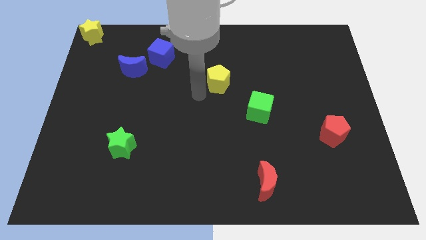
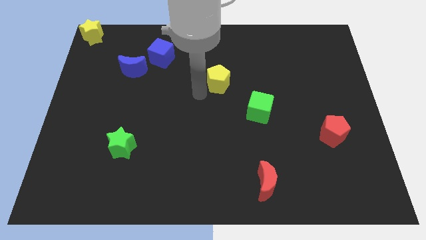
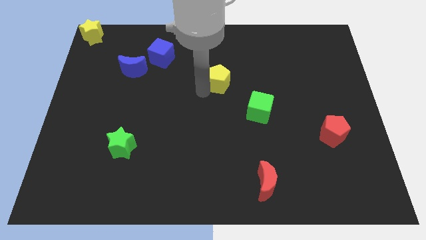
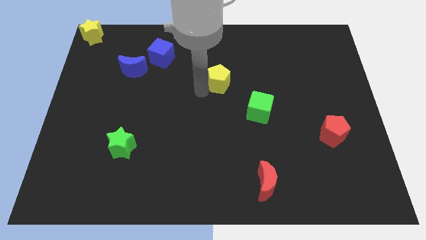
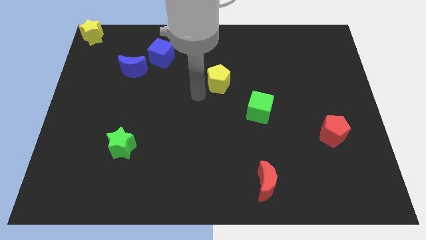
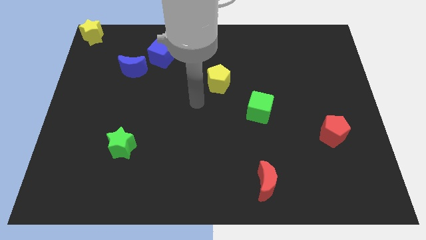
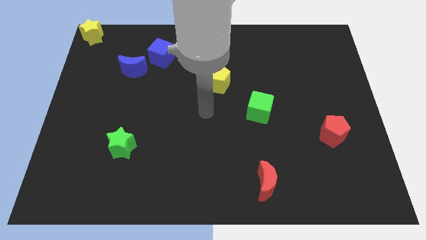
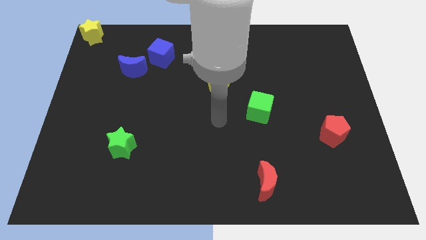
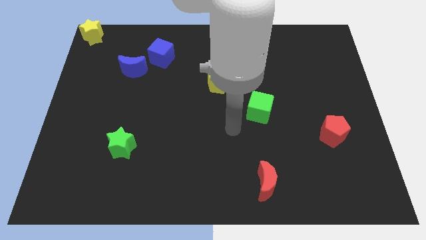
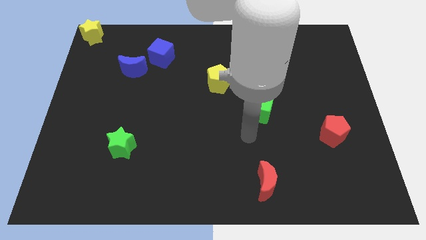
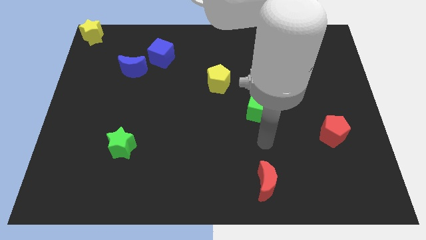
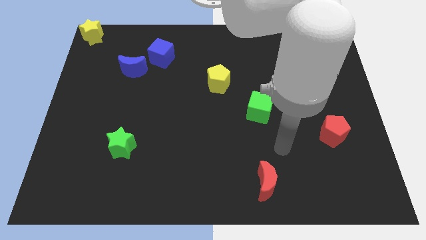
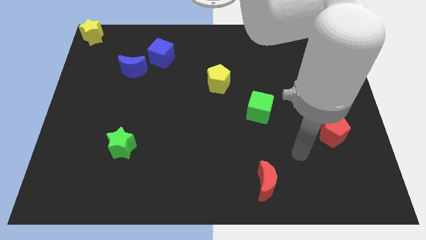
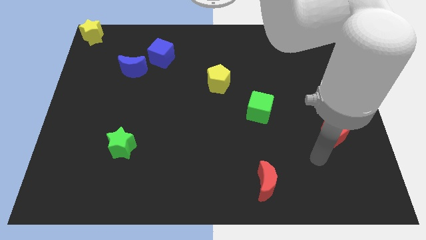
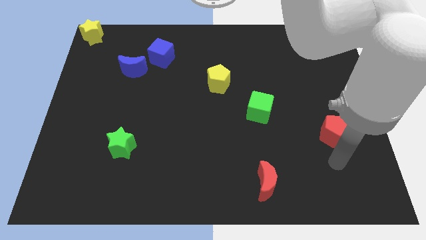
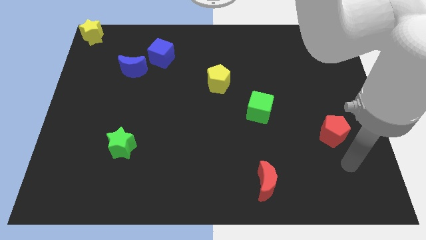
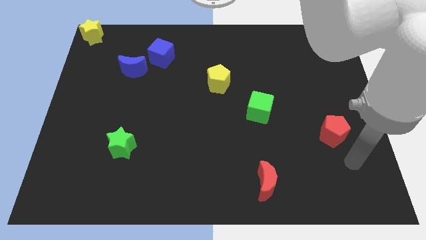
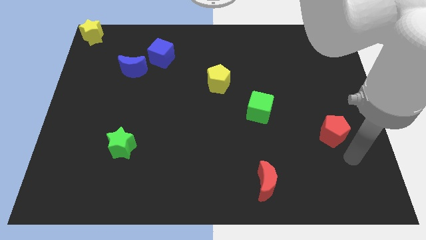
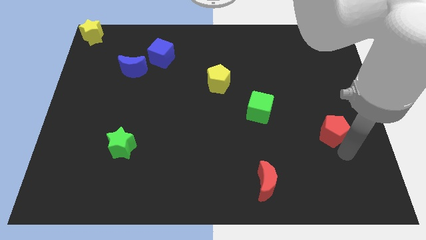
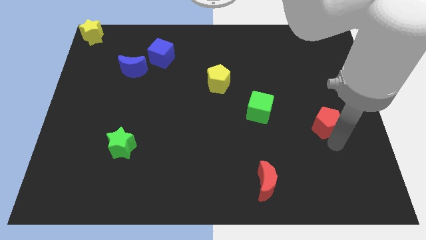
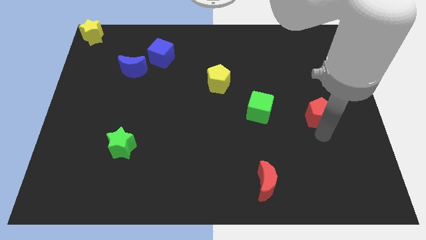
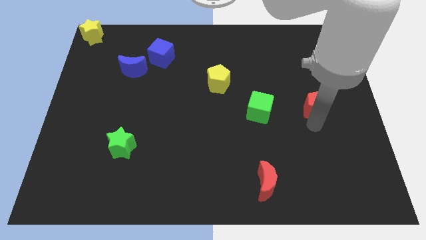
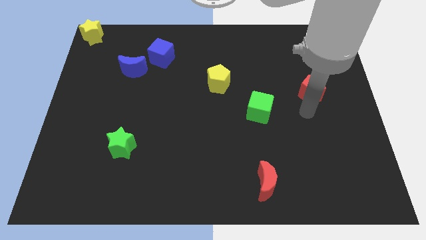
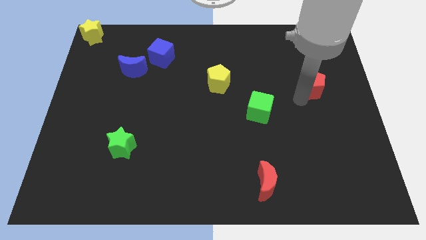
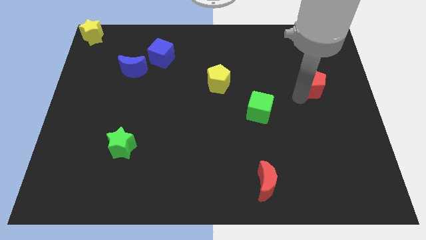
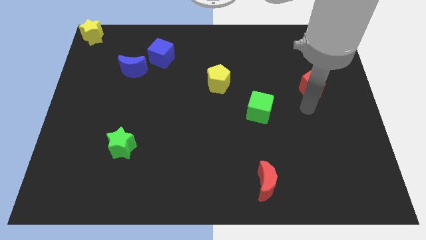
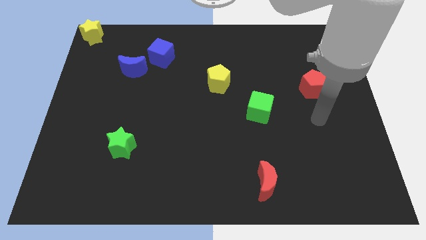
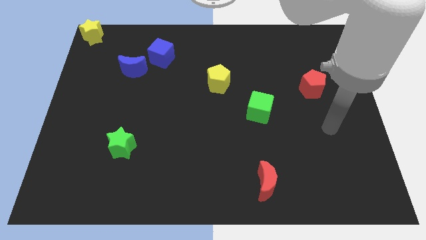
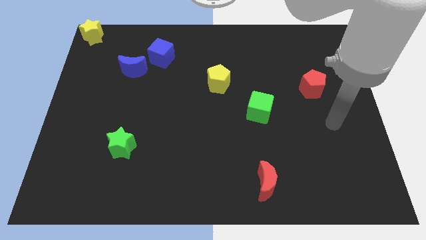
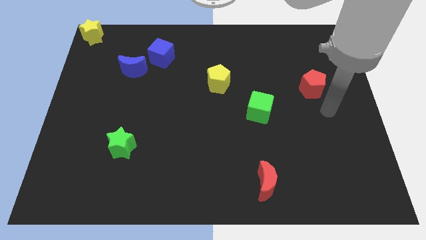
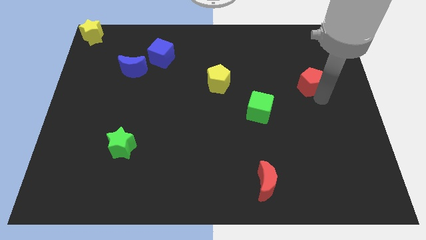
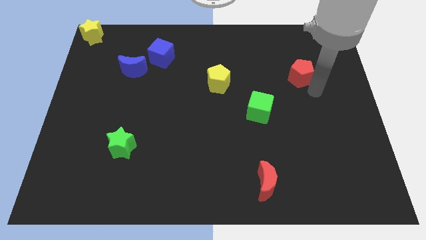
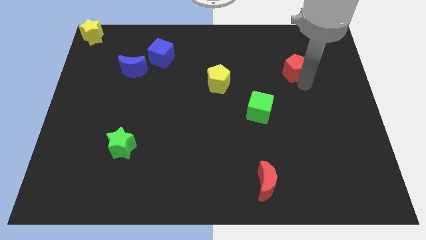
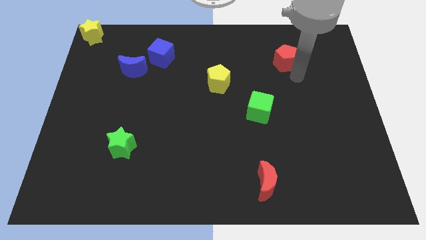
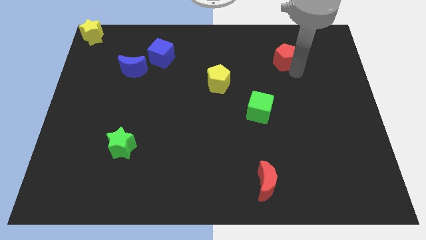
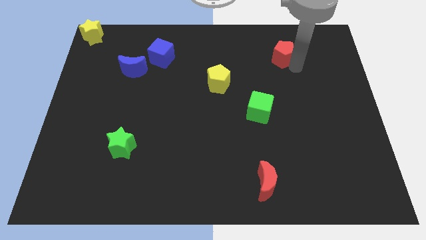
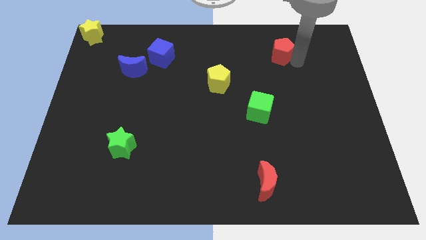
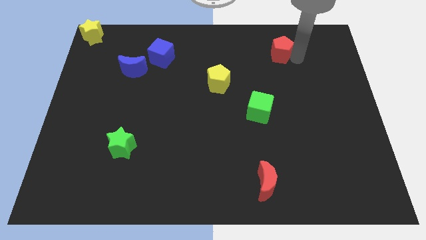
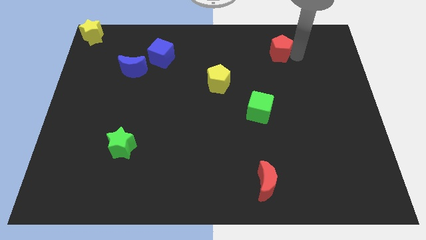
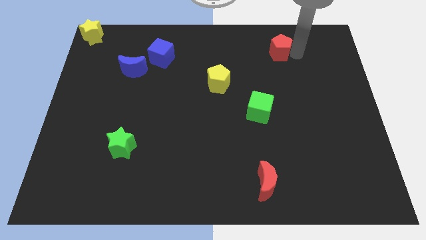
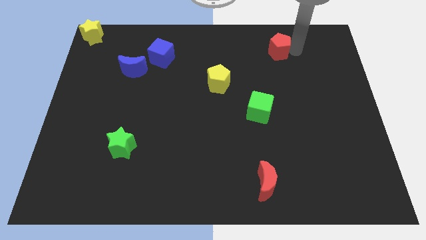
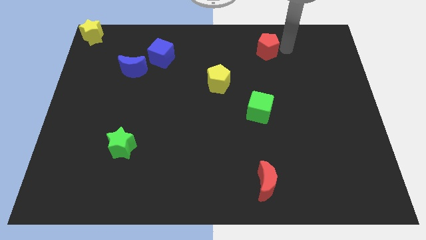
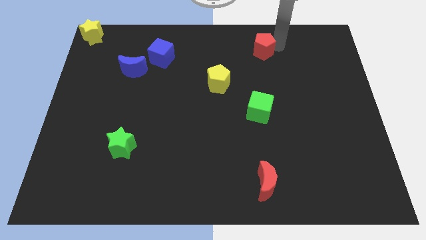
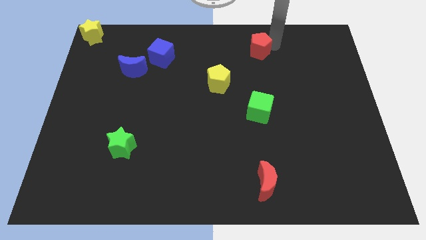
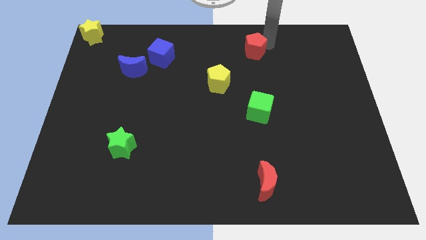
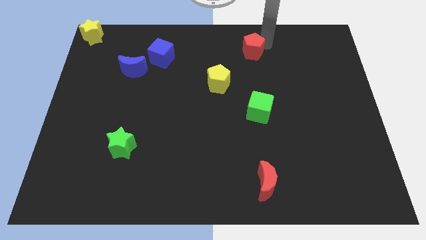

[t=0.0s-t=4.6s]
place the red pentagon vertically above the green cube

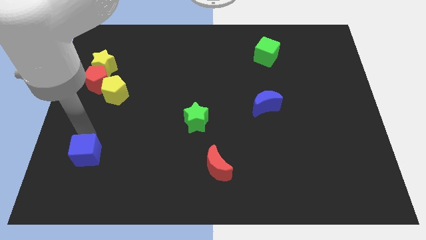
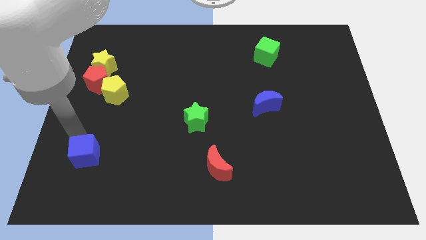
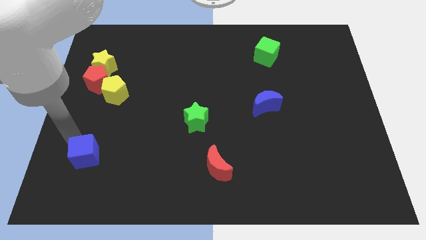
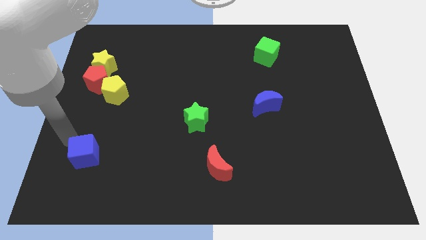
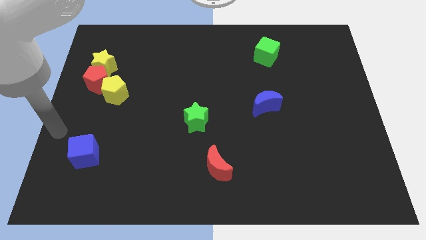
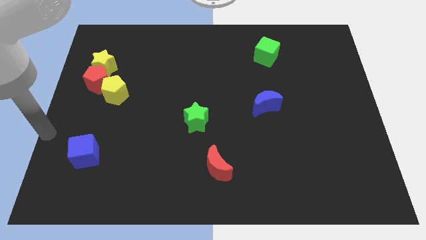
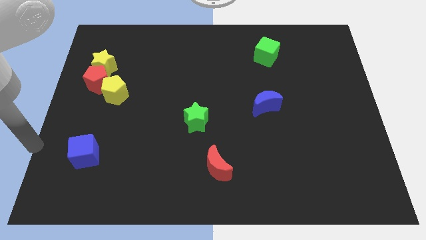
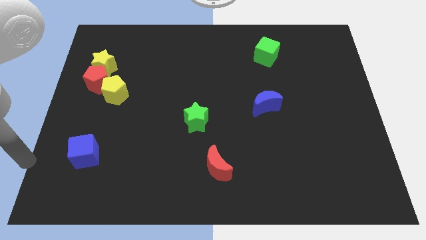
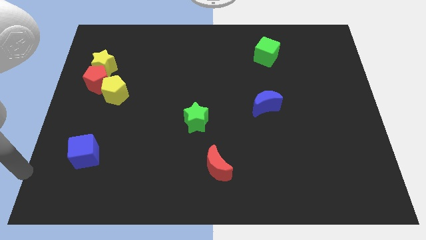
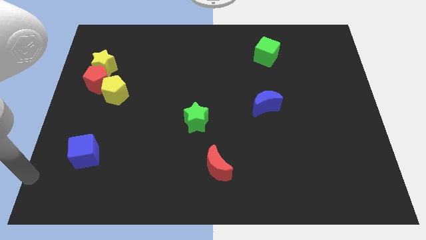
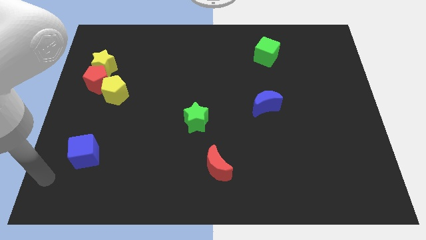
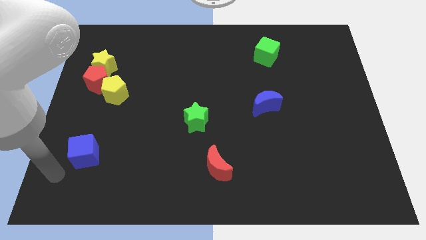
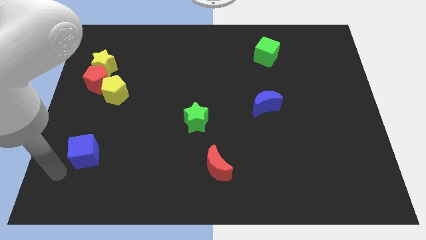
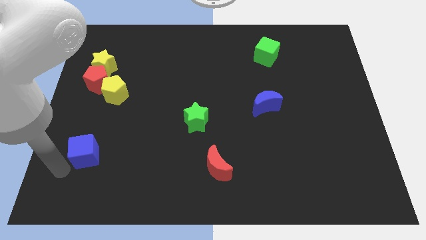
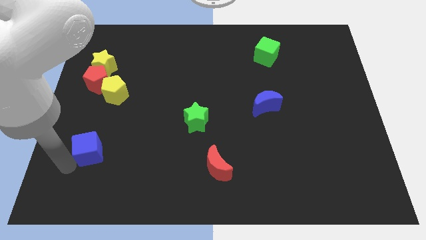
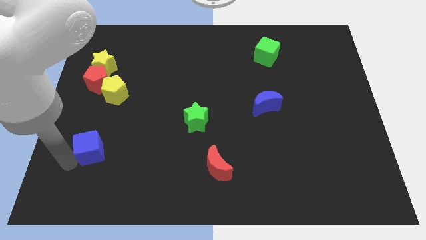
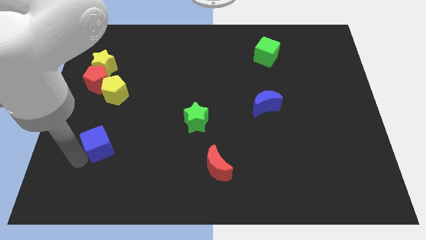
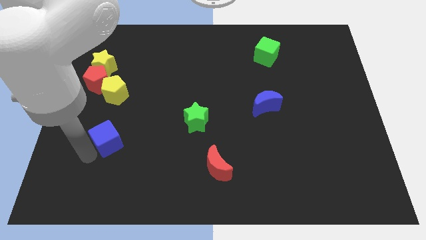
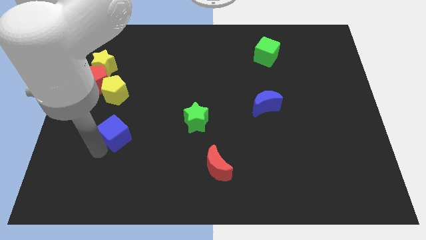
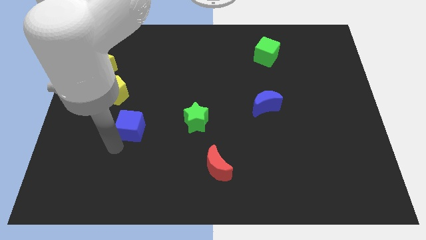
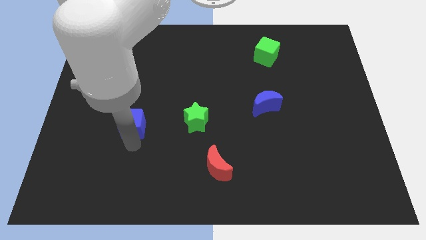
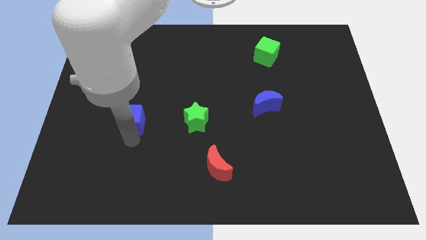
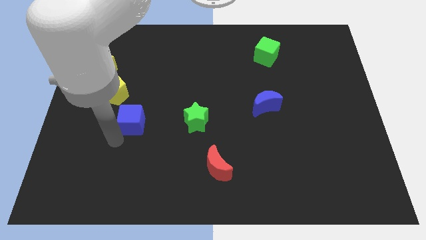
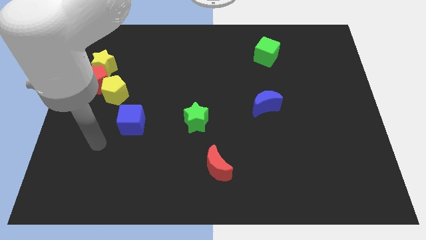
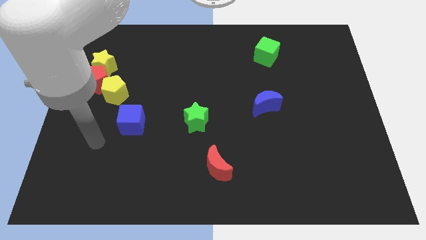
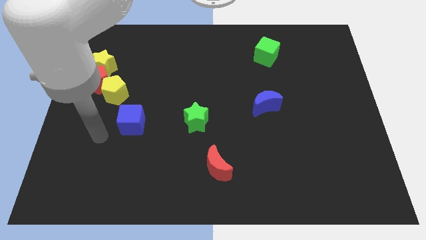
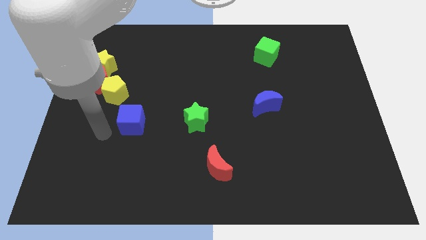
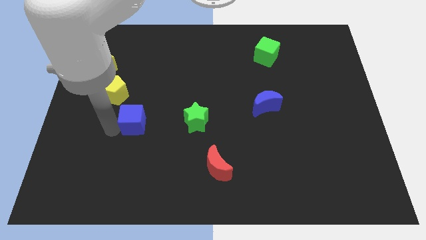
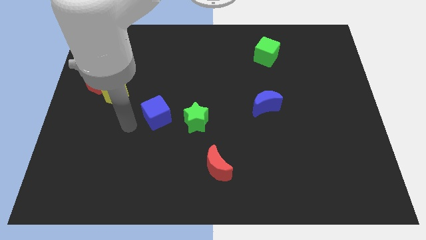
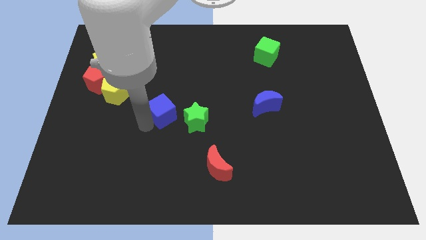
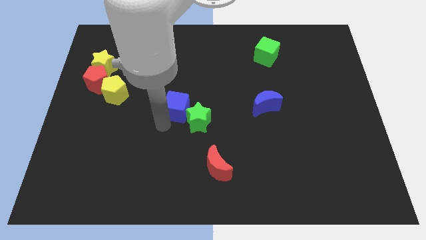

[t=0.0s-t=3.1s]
push the blue cube into the green star

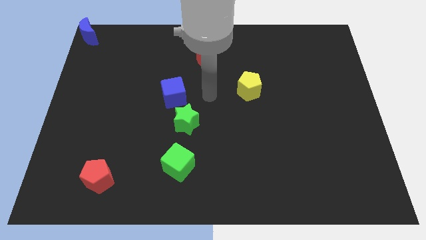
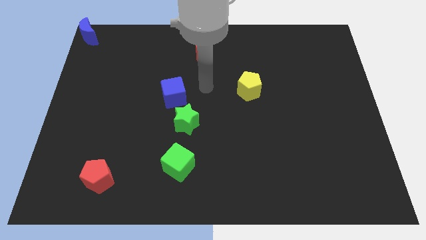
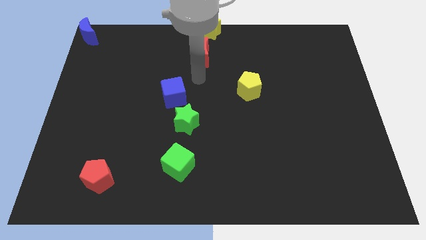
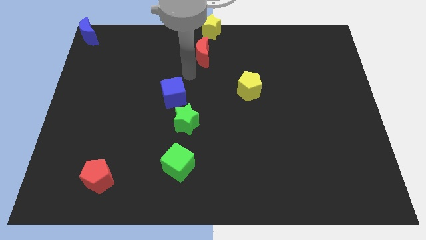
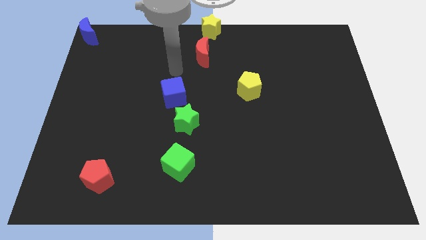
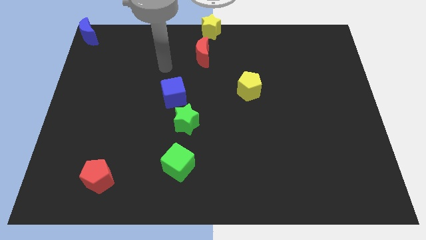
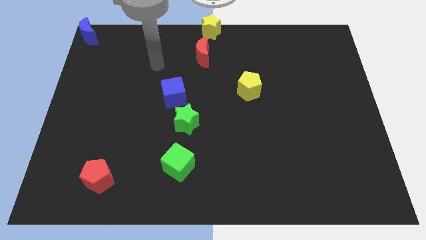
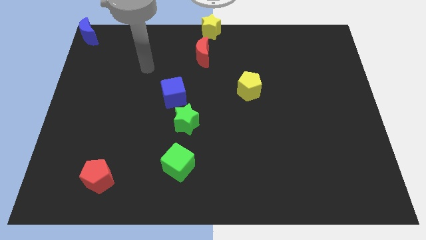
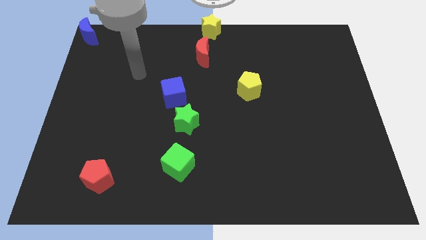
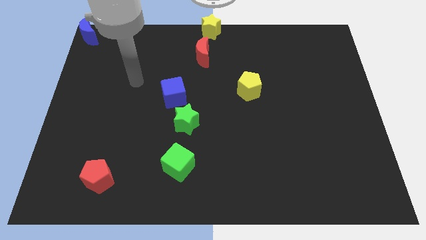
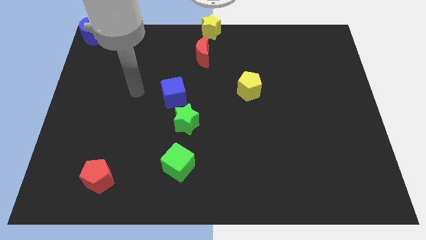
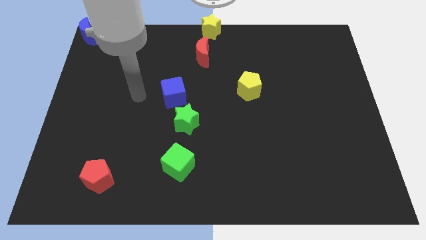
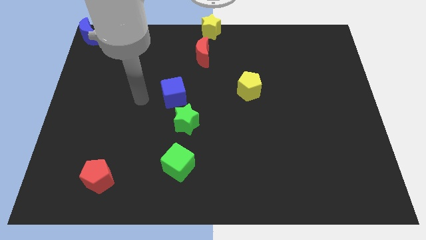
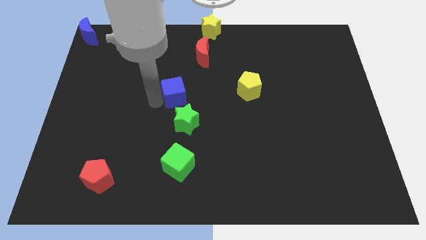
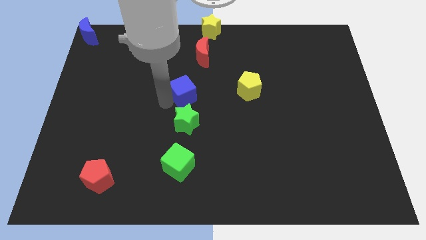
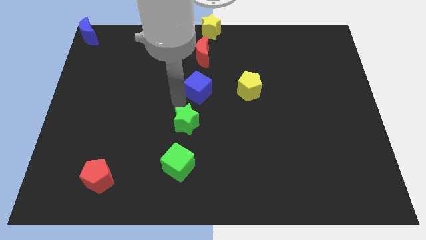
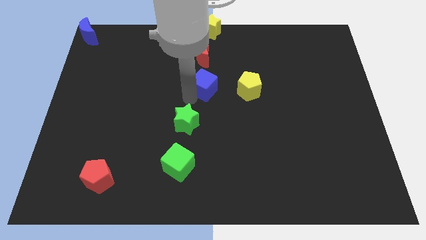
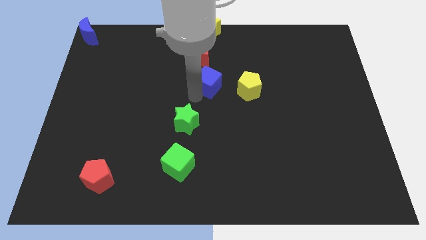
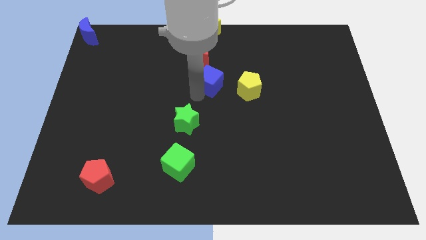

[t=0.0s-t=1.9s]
push the blue cube close to the red crescent
